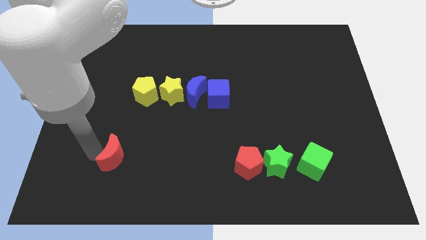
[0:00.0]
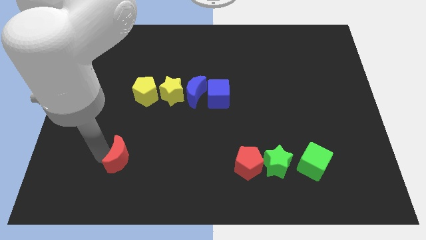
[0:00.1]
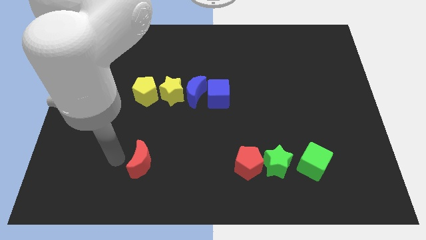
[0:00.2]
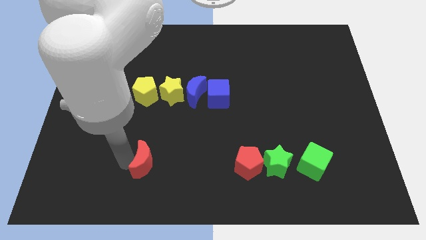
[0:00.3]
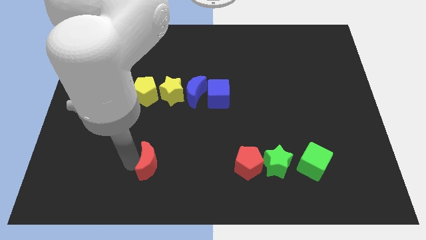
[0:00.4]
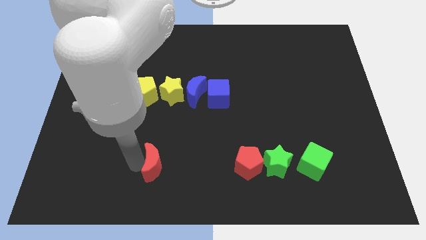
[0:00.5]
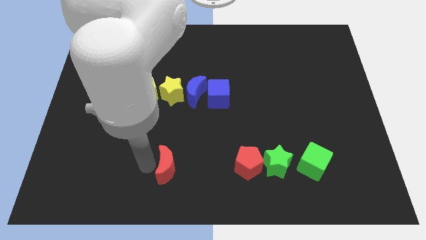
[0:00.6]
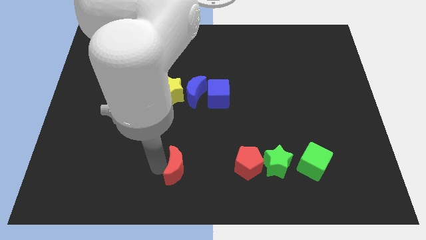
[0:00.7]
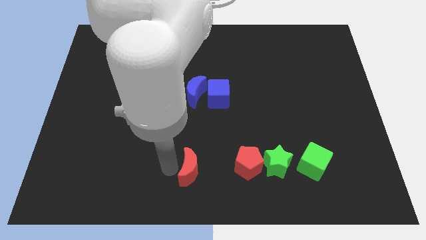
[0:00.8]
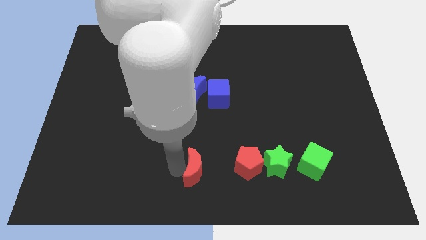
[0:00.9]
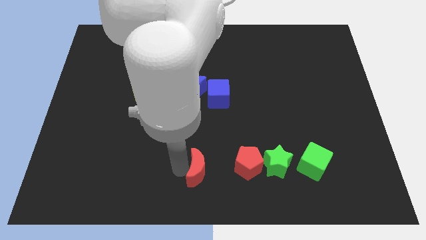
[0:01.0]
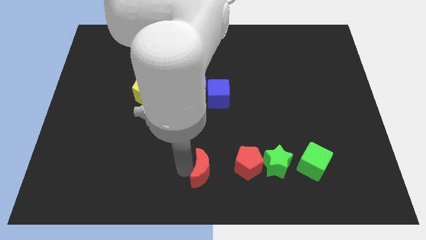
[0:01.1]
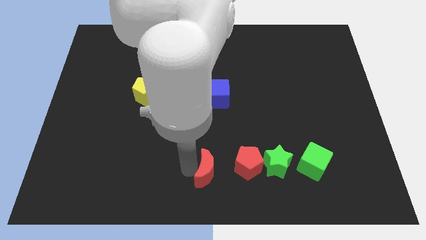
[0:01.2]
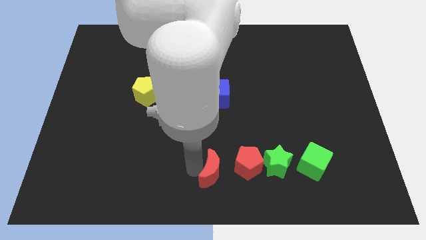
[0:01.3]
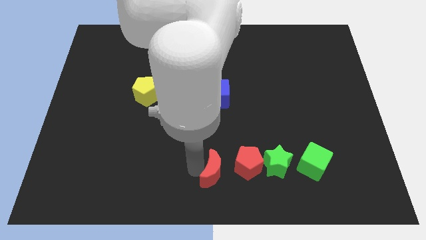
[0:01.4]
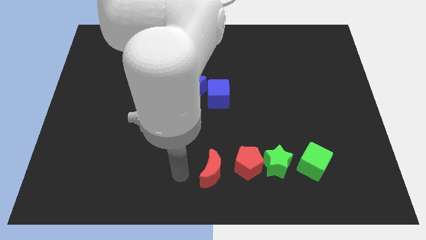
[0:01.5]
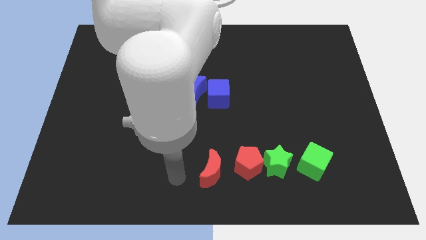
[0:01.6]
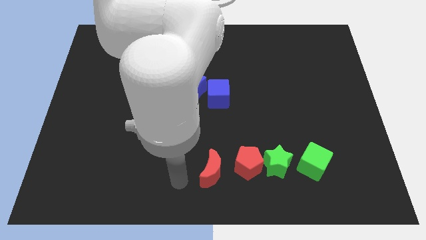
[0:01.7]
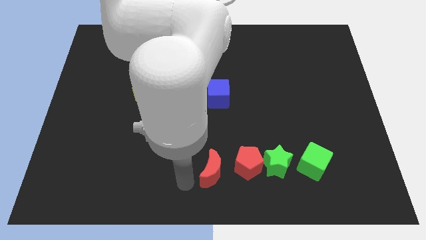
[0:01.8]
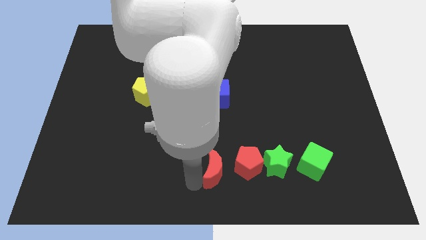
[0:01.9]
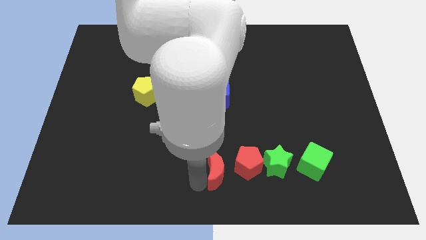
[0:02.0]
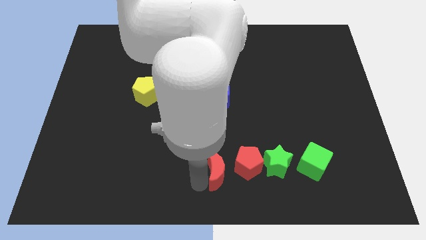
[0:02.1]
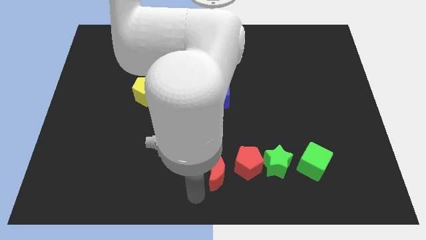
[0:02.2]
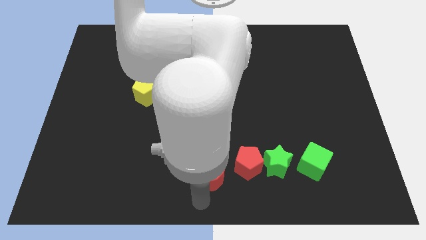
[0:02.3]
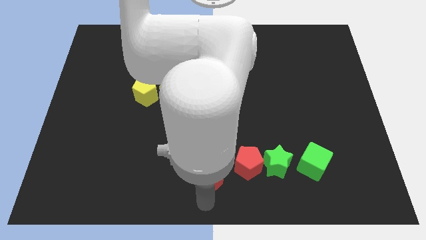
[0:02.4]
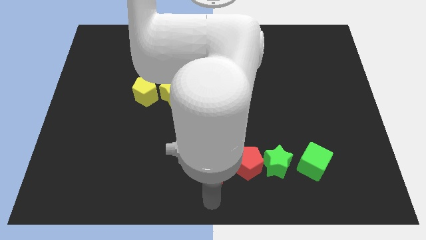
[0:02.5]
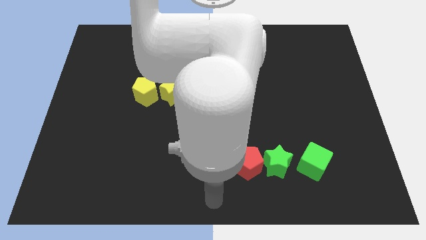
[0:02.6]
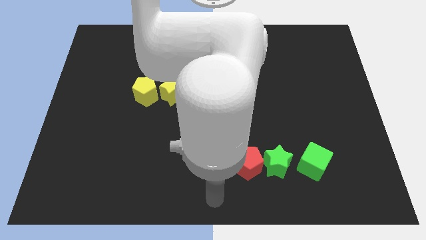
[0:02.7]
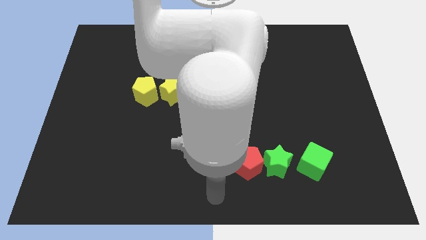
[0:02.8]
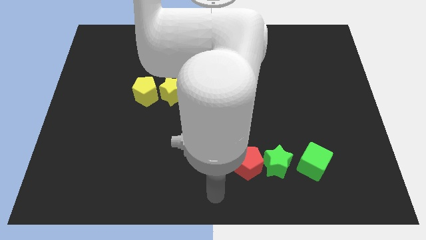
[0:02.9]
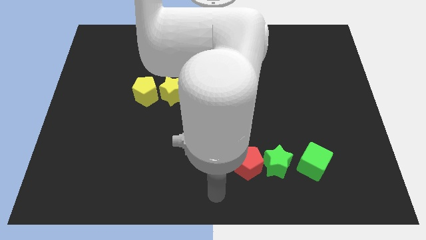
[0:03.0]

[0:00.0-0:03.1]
place red crescent beside red pentagon

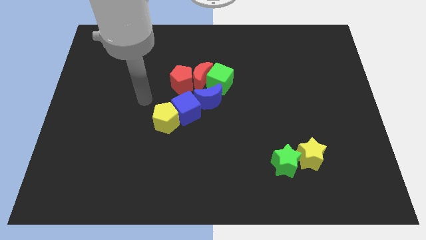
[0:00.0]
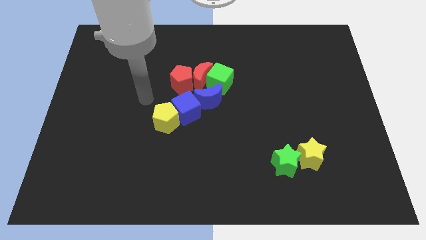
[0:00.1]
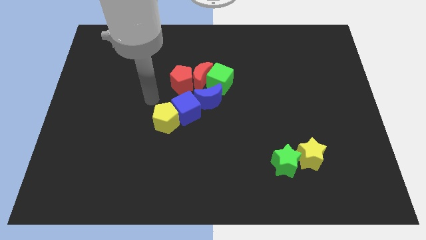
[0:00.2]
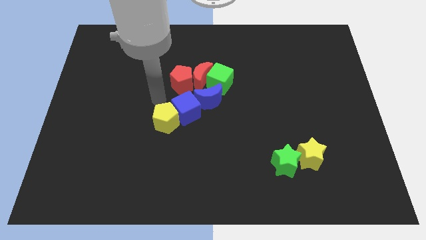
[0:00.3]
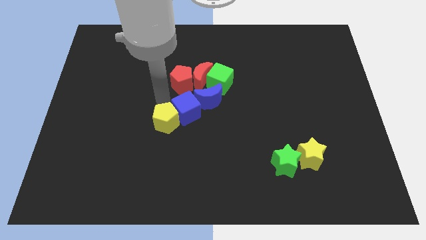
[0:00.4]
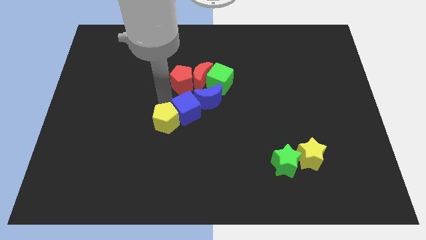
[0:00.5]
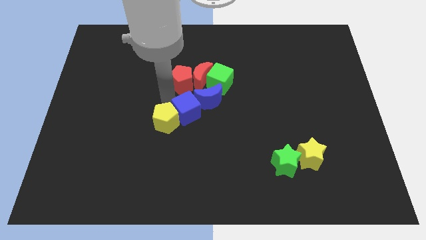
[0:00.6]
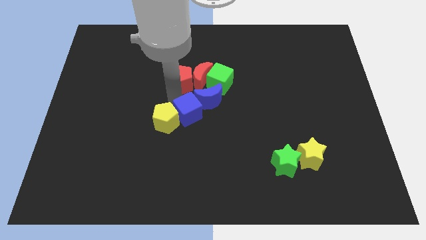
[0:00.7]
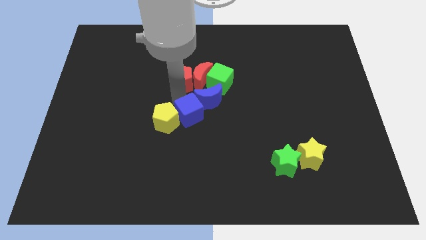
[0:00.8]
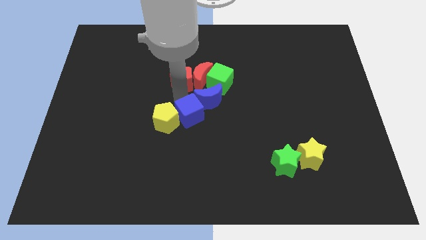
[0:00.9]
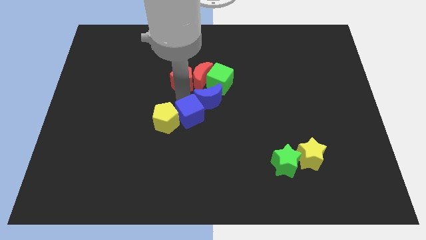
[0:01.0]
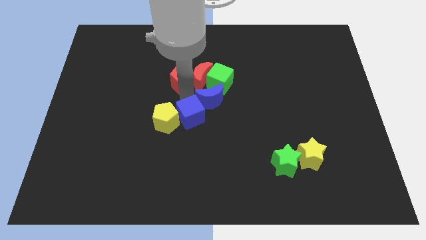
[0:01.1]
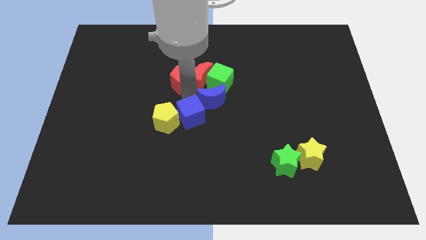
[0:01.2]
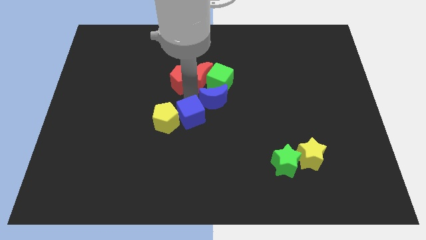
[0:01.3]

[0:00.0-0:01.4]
slightly push the blue cube towards the bottom

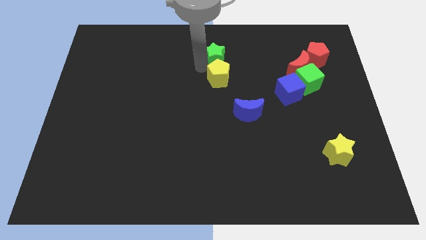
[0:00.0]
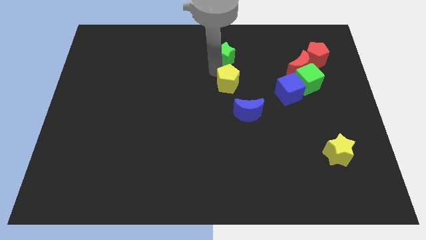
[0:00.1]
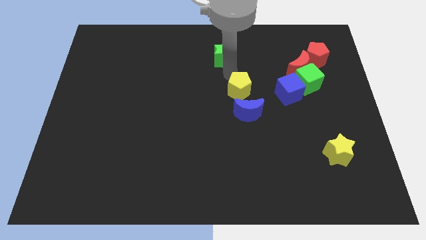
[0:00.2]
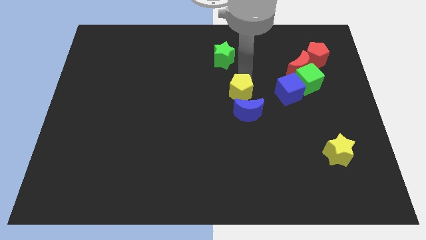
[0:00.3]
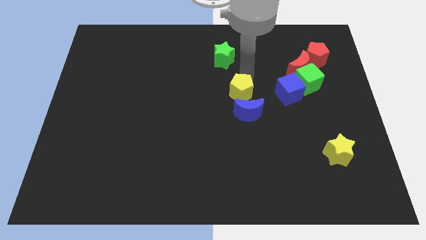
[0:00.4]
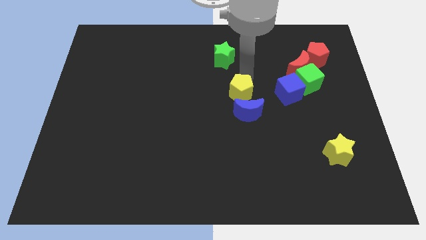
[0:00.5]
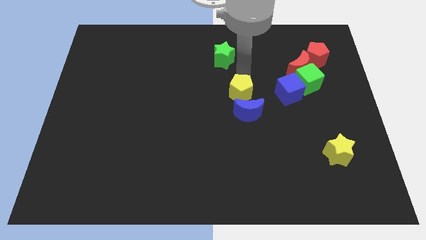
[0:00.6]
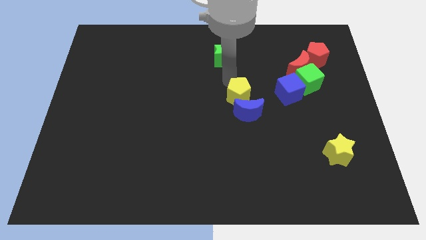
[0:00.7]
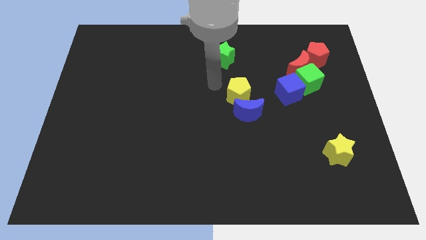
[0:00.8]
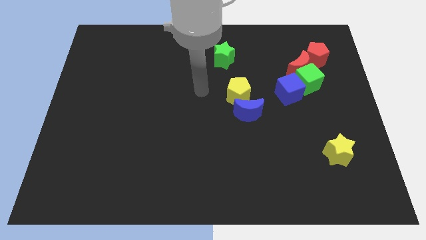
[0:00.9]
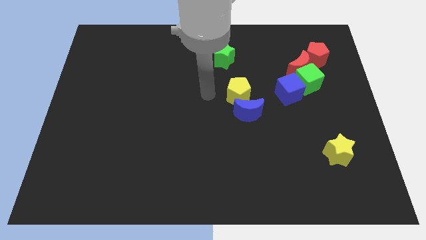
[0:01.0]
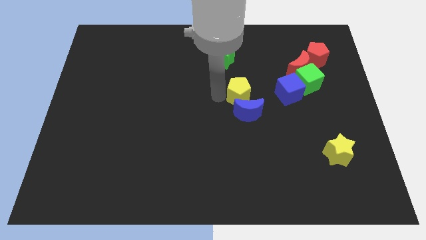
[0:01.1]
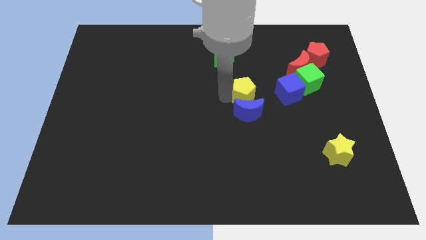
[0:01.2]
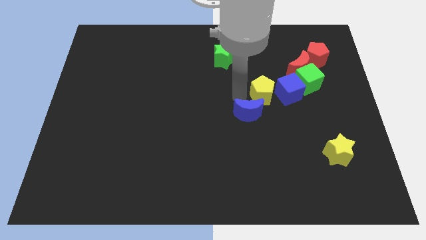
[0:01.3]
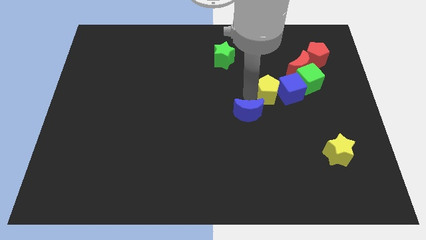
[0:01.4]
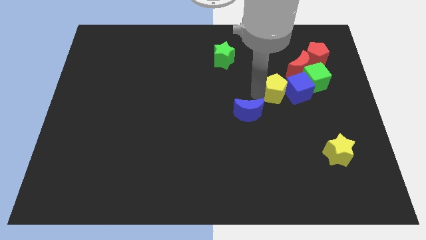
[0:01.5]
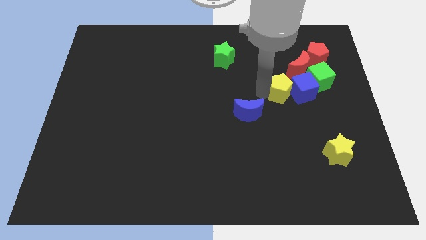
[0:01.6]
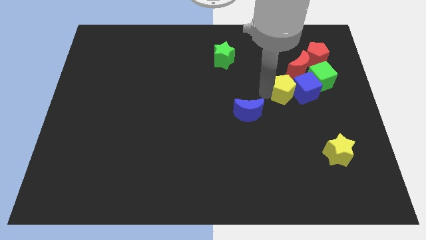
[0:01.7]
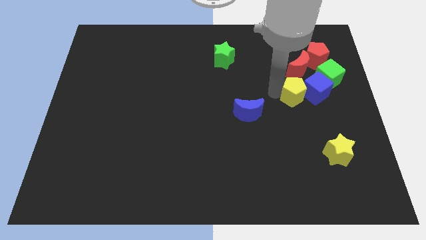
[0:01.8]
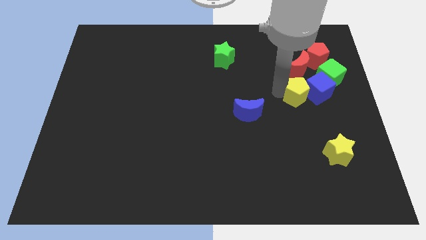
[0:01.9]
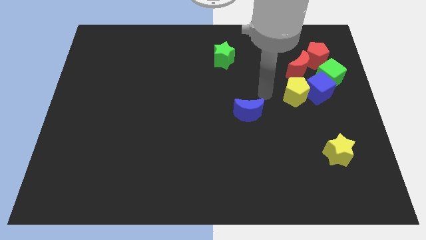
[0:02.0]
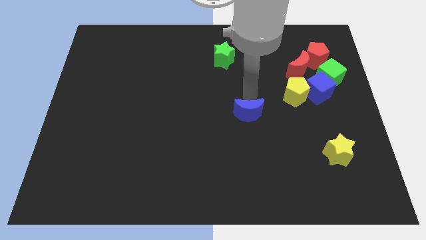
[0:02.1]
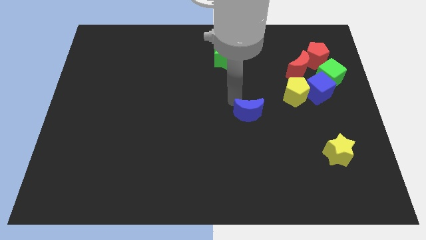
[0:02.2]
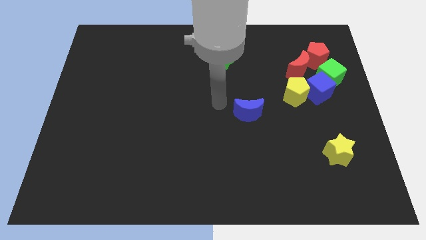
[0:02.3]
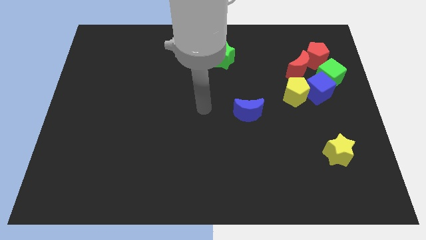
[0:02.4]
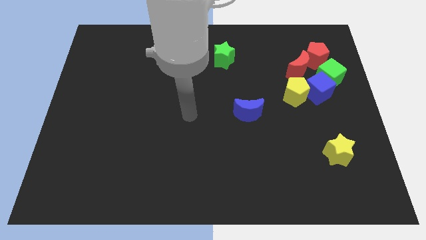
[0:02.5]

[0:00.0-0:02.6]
push the yellow pentagon to the group of blocks

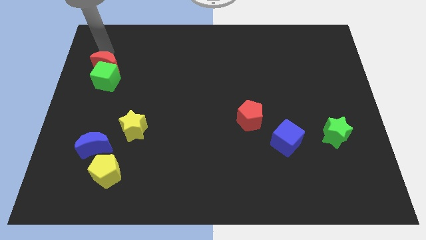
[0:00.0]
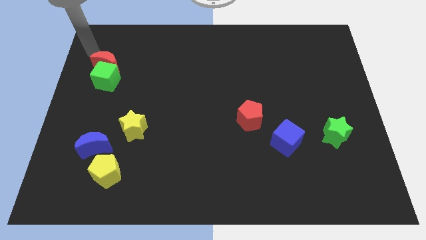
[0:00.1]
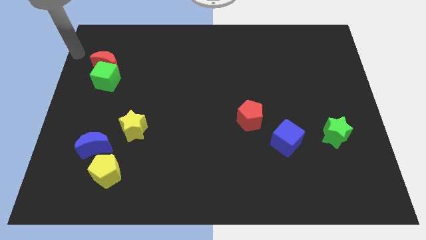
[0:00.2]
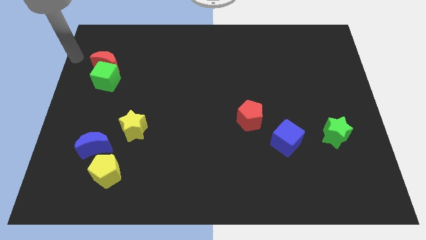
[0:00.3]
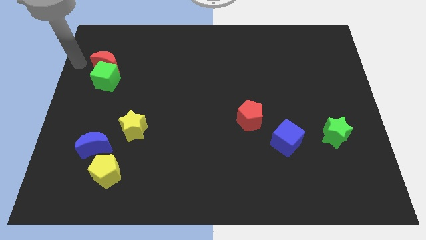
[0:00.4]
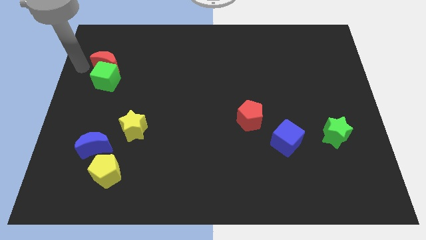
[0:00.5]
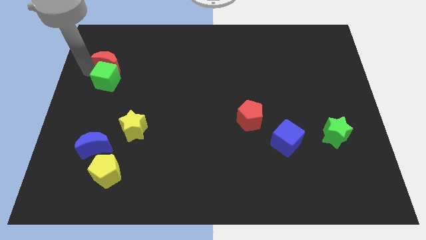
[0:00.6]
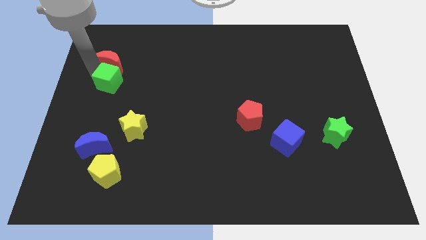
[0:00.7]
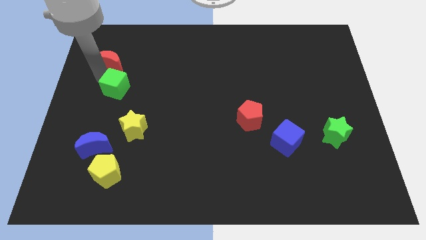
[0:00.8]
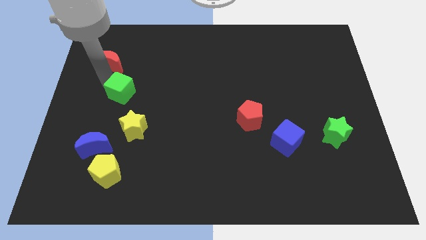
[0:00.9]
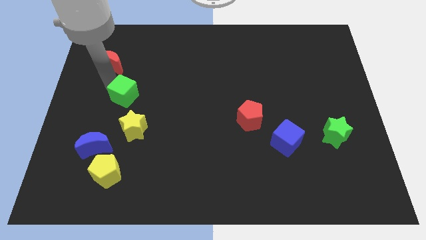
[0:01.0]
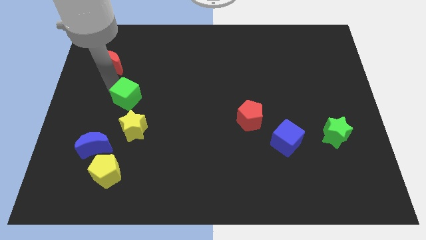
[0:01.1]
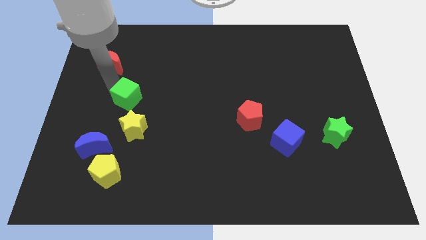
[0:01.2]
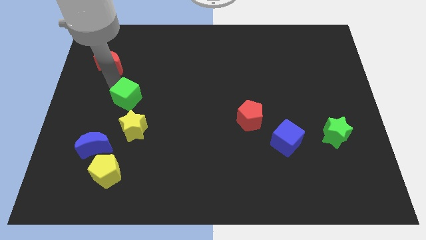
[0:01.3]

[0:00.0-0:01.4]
put the green cube in between the yellow star and red moon

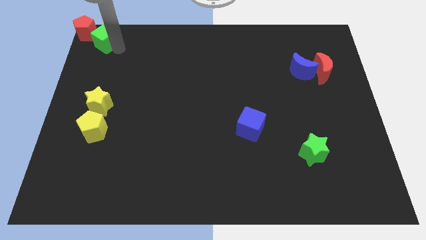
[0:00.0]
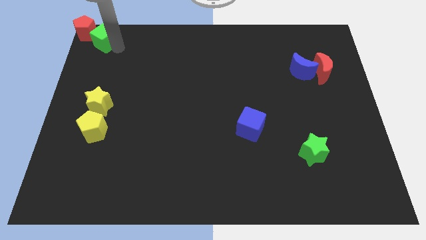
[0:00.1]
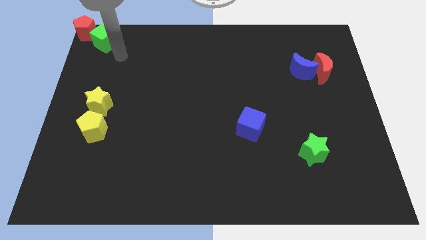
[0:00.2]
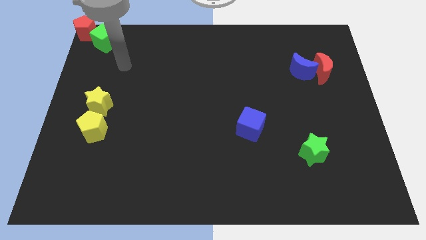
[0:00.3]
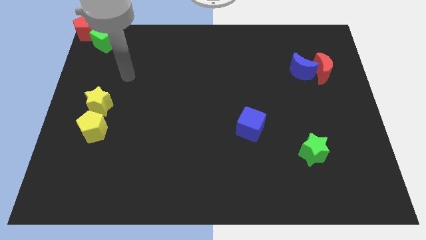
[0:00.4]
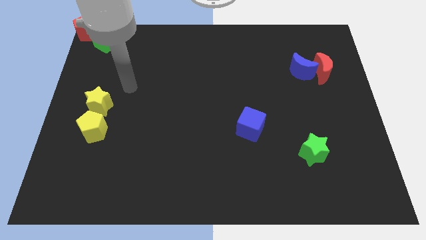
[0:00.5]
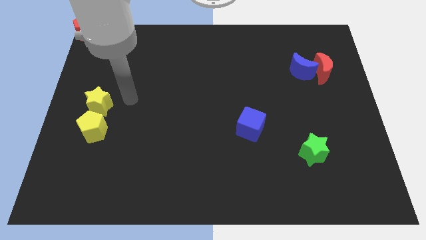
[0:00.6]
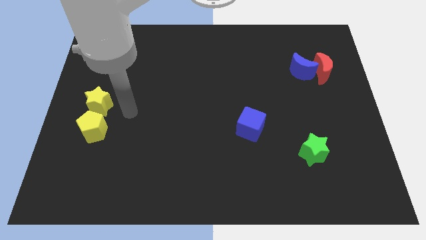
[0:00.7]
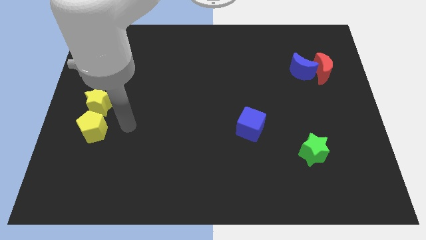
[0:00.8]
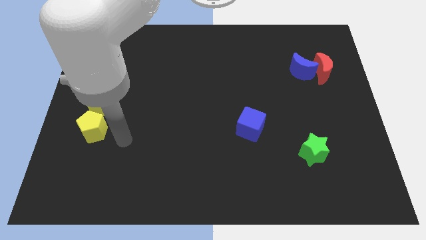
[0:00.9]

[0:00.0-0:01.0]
move your arm to the right of the yellow pentagon
